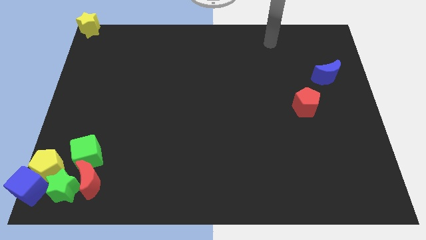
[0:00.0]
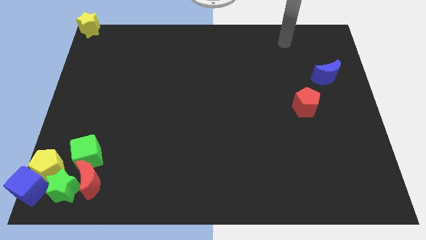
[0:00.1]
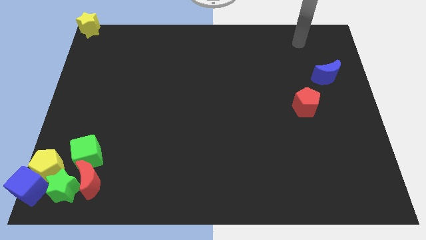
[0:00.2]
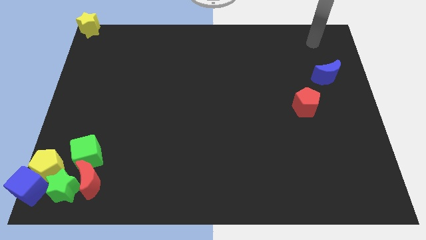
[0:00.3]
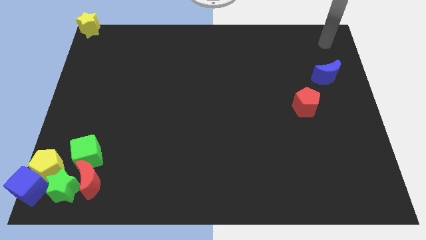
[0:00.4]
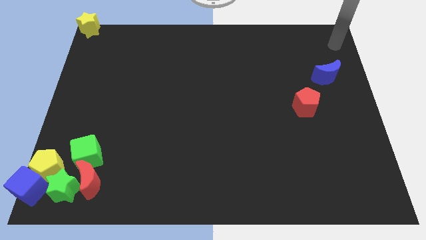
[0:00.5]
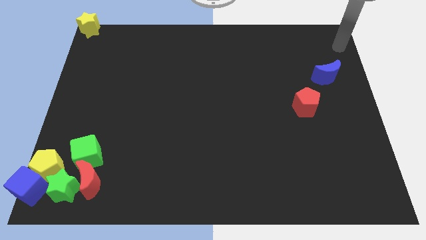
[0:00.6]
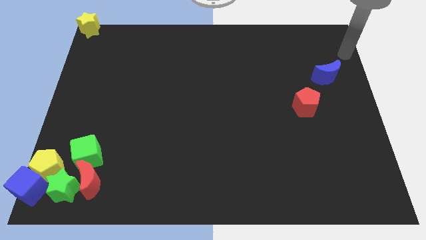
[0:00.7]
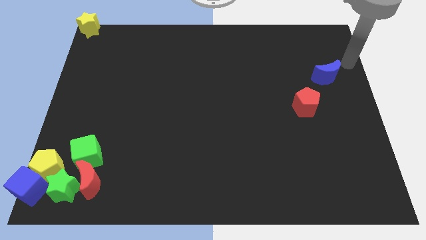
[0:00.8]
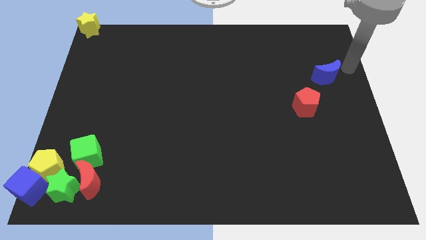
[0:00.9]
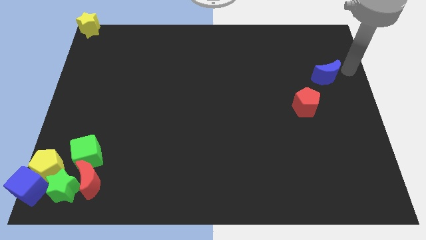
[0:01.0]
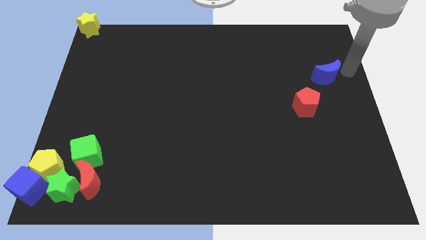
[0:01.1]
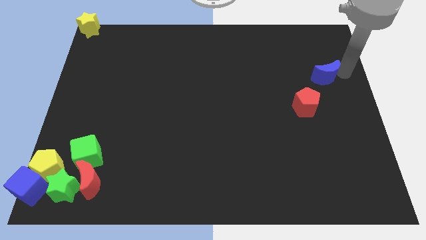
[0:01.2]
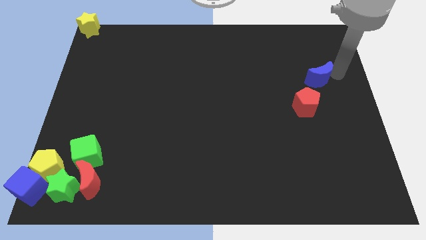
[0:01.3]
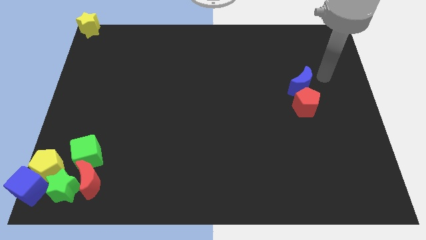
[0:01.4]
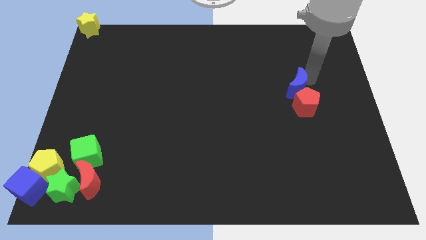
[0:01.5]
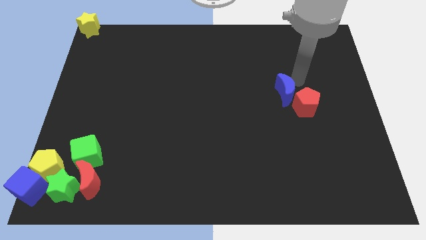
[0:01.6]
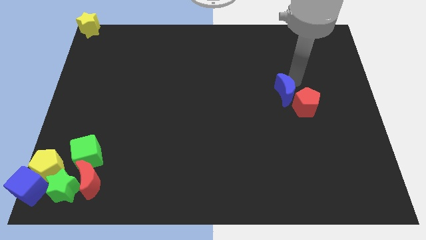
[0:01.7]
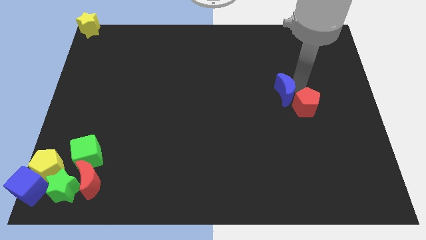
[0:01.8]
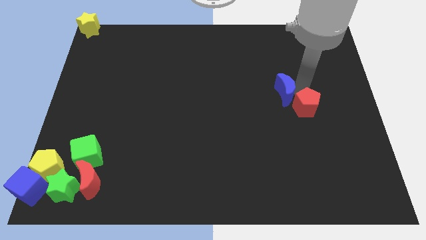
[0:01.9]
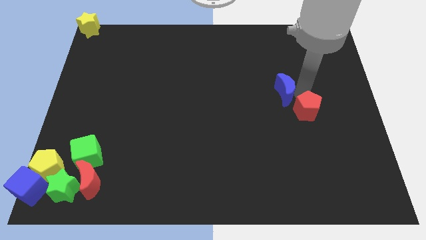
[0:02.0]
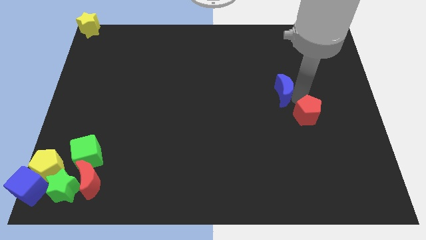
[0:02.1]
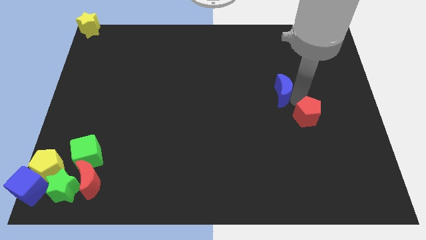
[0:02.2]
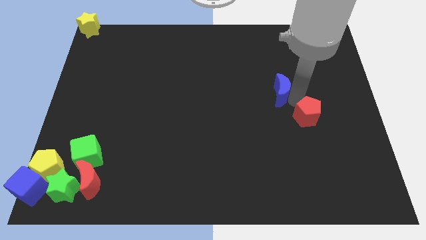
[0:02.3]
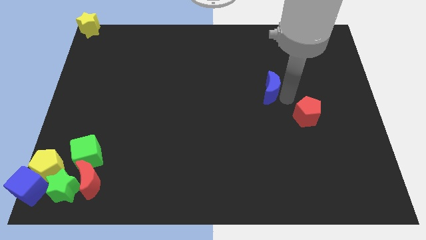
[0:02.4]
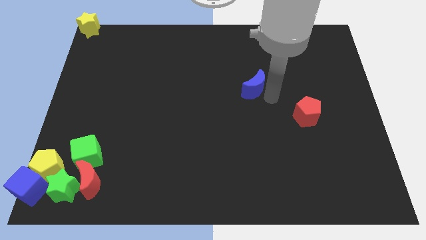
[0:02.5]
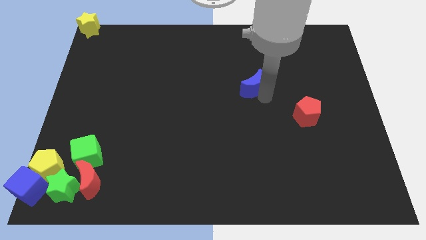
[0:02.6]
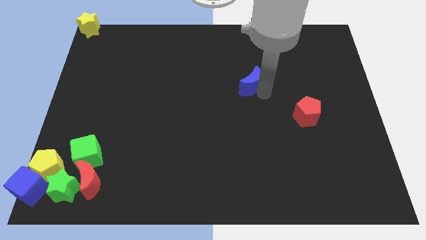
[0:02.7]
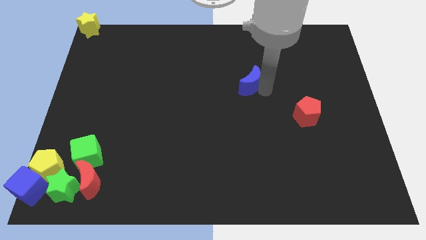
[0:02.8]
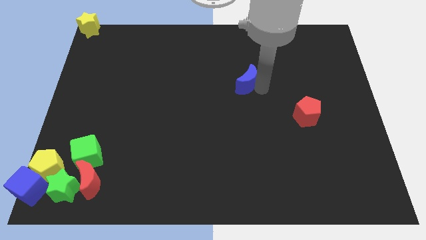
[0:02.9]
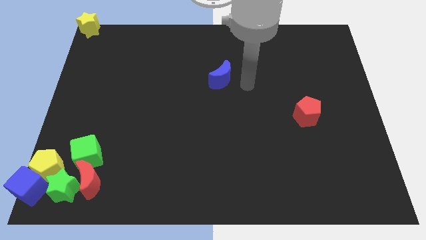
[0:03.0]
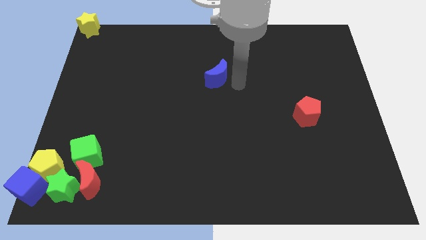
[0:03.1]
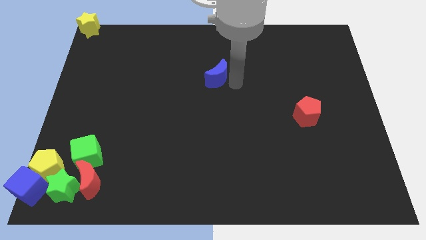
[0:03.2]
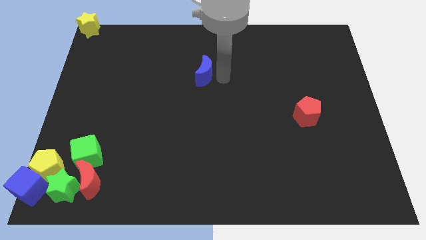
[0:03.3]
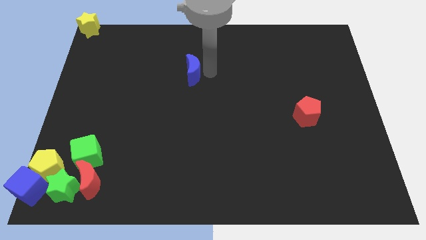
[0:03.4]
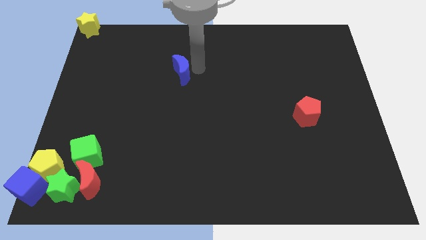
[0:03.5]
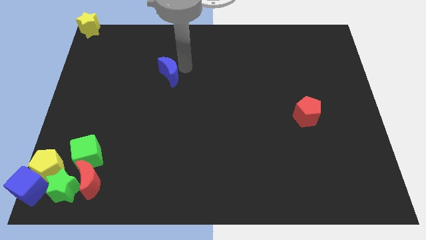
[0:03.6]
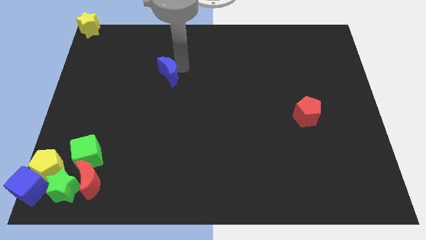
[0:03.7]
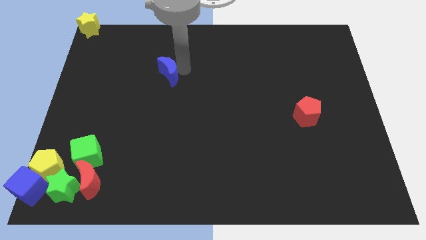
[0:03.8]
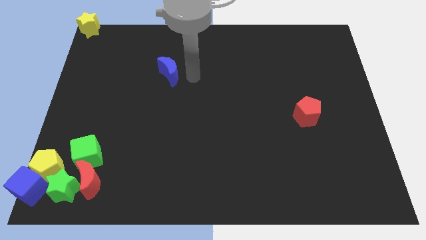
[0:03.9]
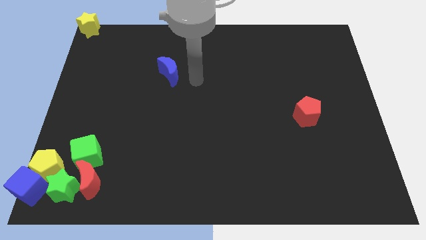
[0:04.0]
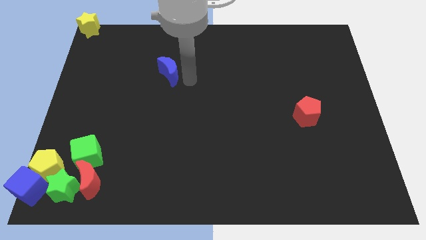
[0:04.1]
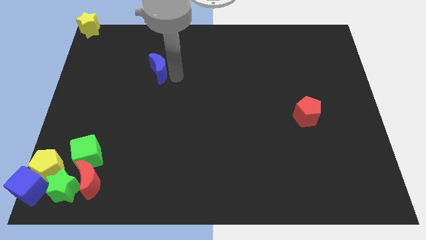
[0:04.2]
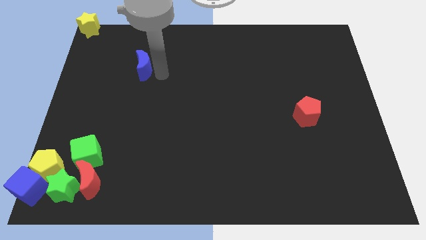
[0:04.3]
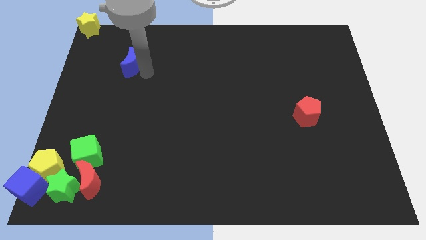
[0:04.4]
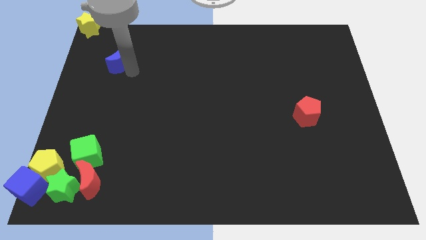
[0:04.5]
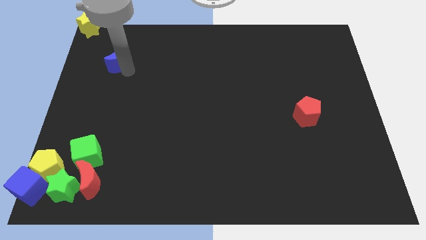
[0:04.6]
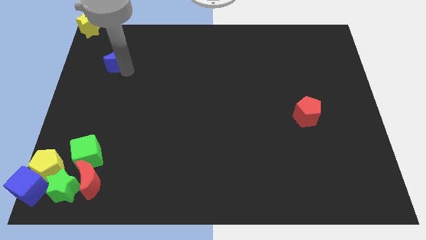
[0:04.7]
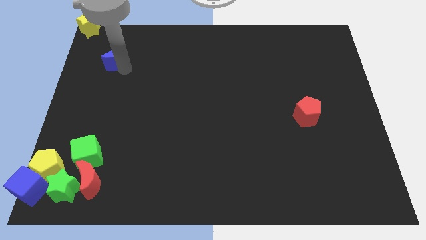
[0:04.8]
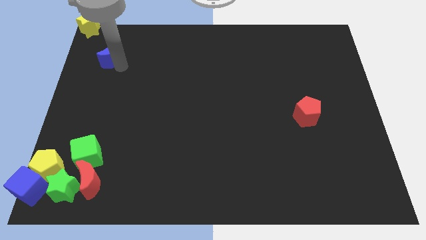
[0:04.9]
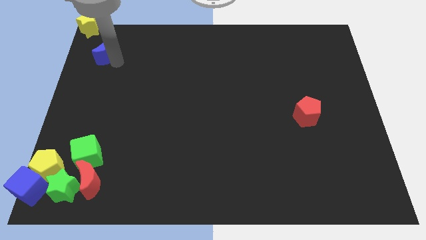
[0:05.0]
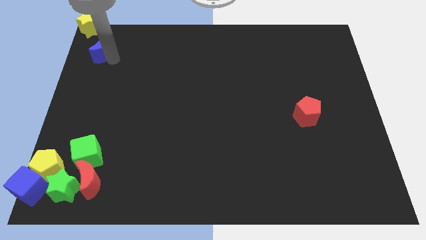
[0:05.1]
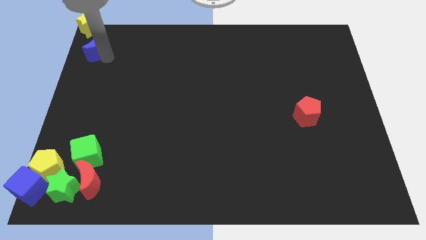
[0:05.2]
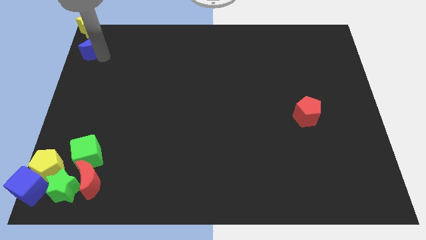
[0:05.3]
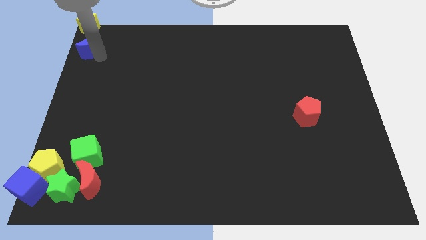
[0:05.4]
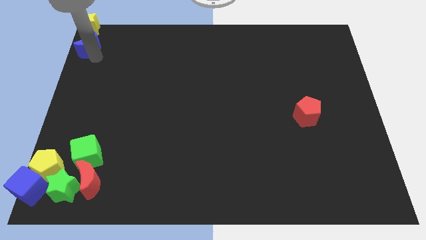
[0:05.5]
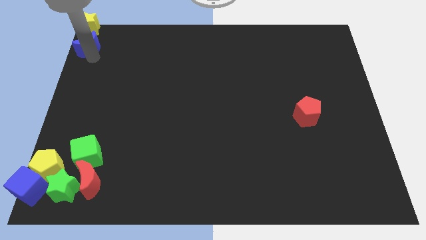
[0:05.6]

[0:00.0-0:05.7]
move the blue crescent towards the bottom of the yellow star

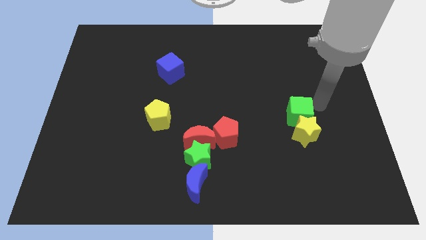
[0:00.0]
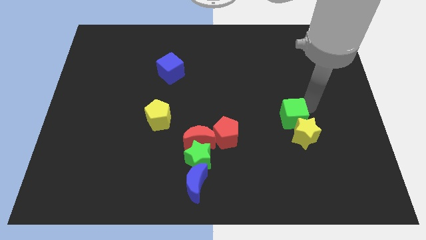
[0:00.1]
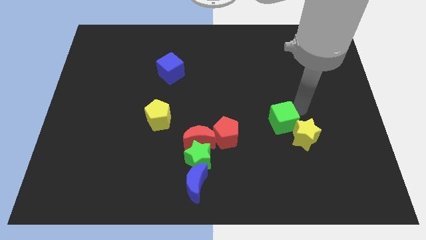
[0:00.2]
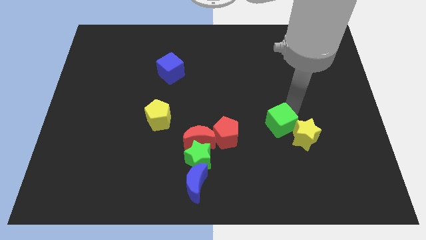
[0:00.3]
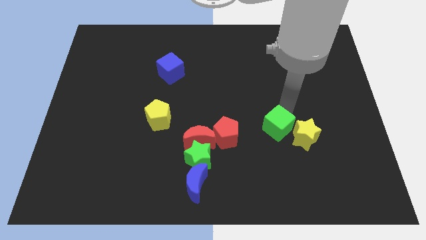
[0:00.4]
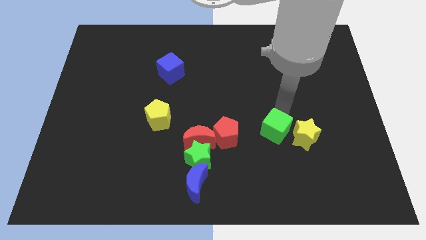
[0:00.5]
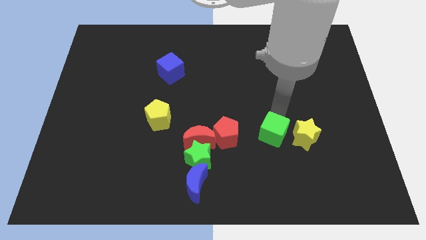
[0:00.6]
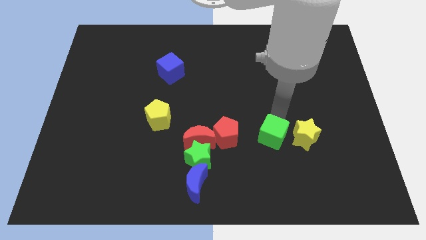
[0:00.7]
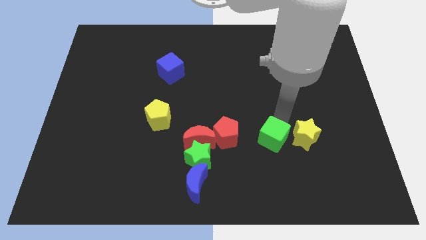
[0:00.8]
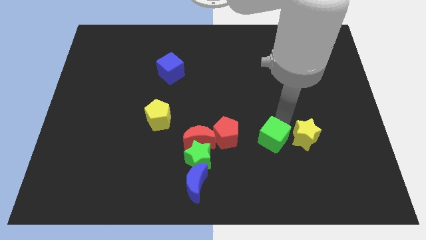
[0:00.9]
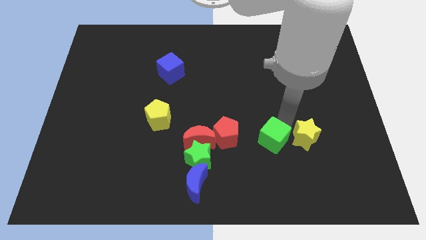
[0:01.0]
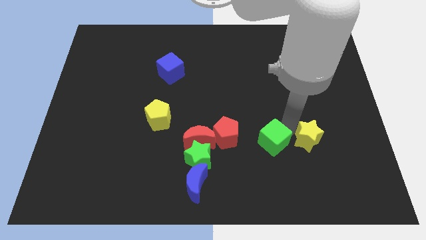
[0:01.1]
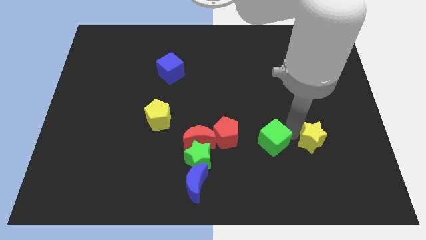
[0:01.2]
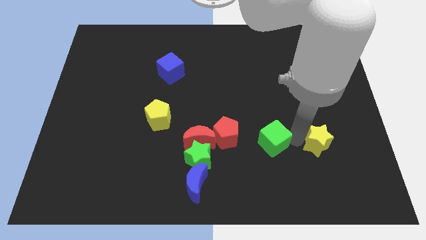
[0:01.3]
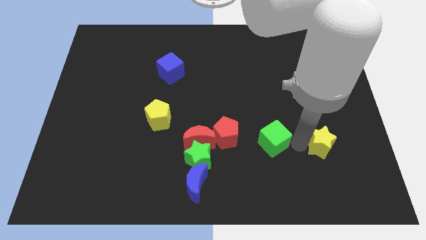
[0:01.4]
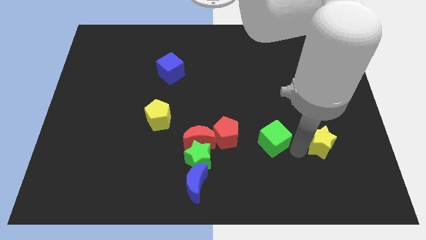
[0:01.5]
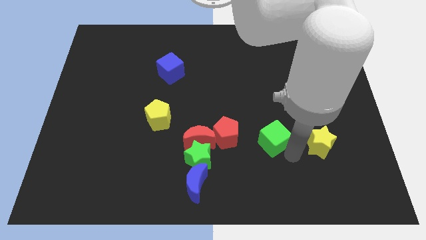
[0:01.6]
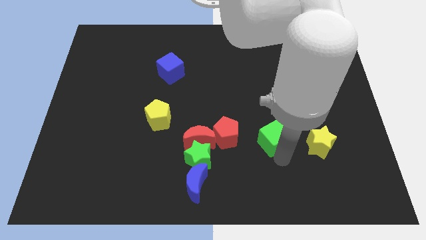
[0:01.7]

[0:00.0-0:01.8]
separate the green cube and yellow star

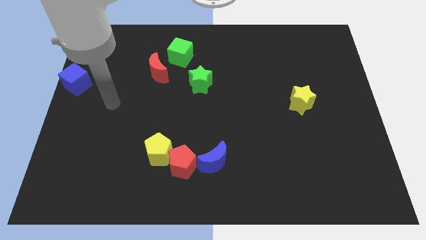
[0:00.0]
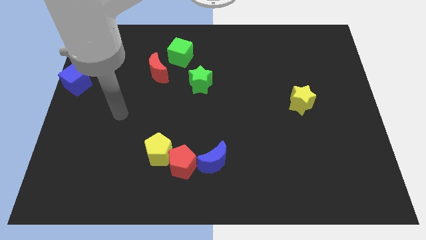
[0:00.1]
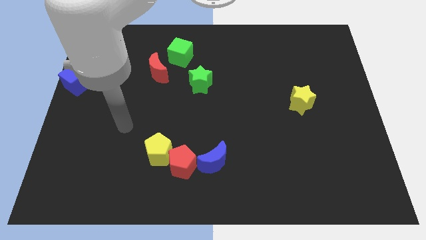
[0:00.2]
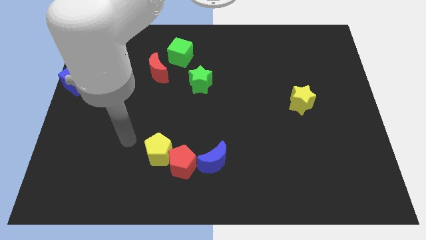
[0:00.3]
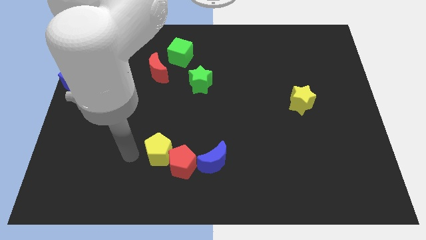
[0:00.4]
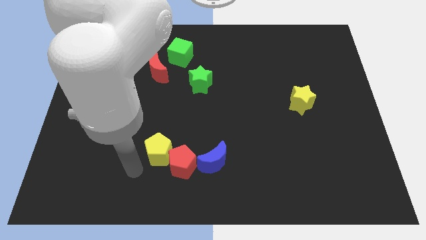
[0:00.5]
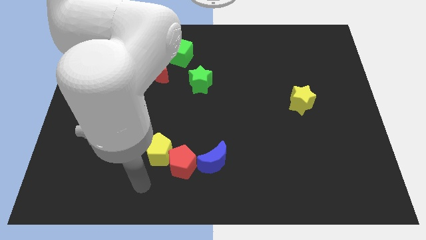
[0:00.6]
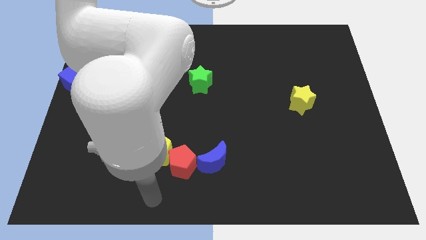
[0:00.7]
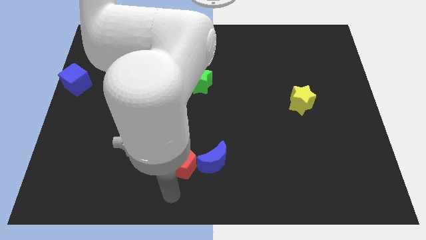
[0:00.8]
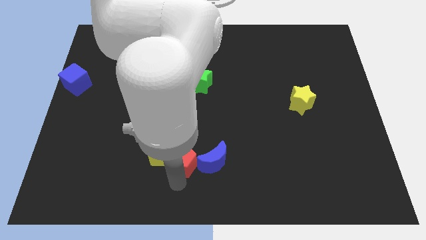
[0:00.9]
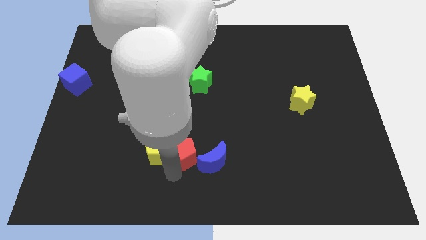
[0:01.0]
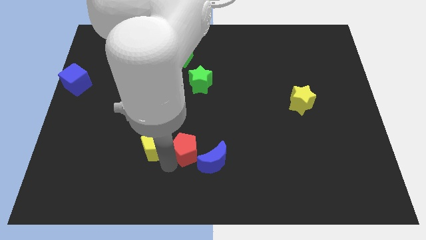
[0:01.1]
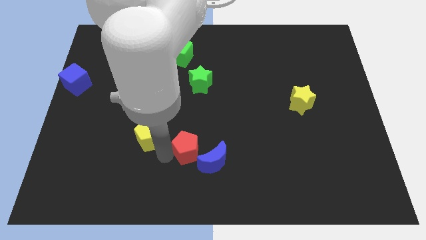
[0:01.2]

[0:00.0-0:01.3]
move the arm towards the yellow pentagon

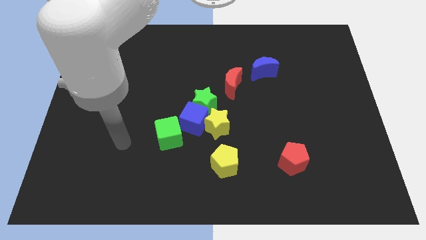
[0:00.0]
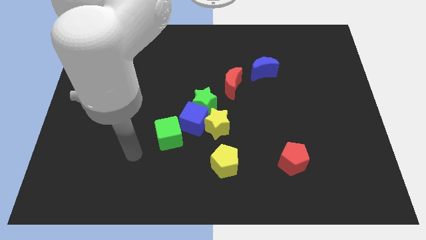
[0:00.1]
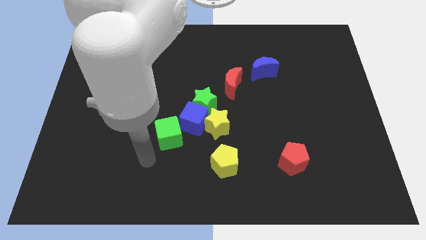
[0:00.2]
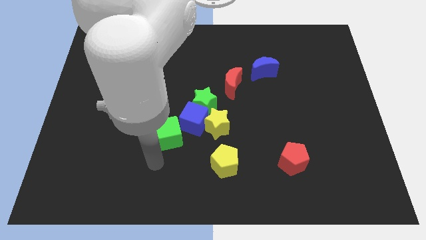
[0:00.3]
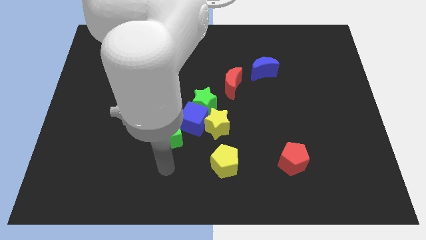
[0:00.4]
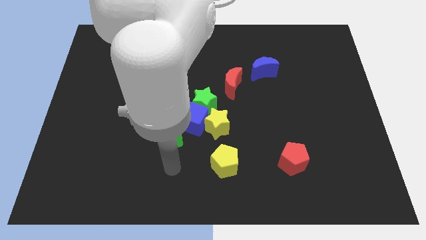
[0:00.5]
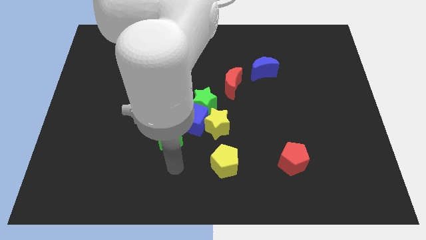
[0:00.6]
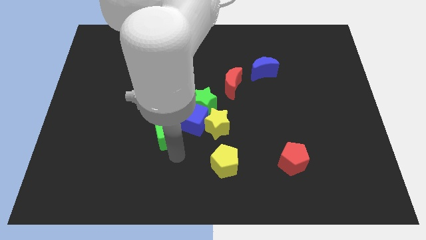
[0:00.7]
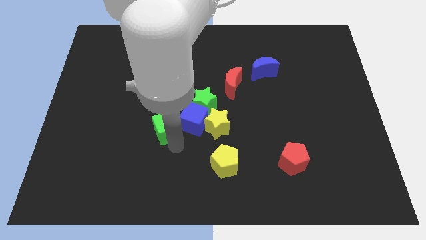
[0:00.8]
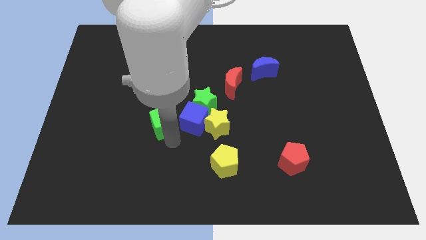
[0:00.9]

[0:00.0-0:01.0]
touch the bottom of green cube
